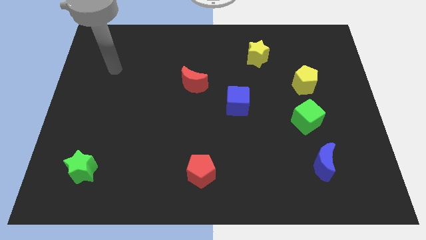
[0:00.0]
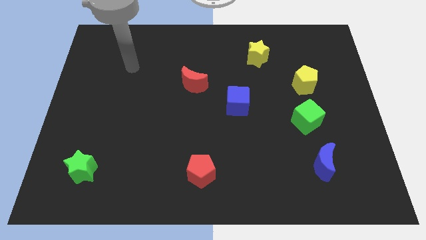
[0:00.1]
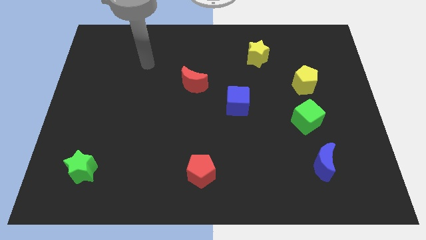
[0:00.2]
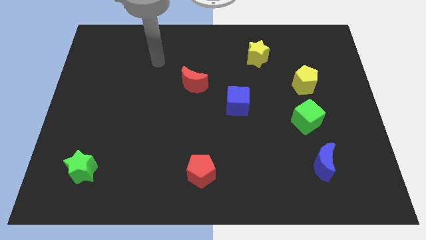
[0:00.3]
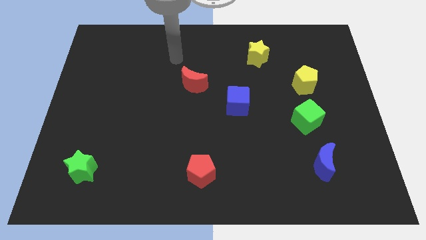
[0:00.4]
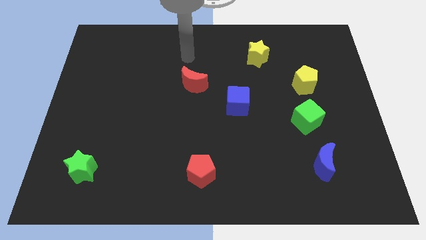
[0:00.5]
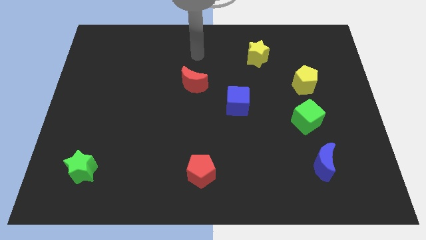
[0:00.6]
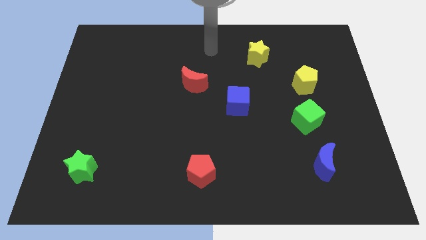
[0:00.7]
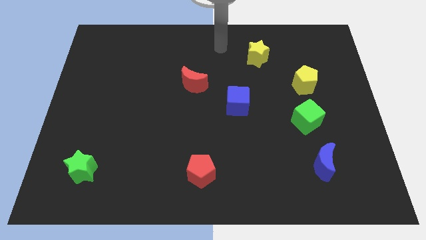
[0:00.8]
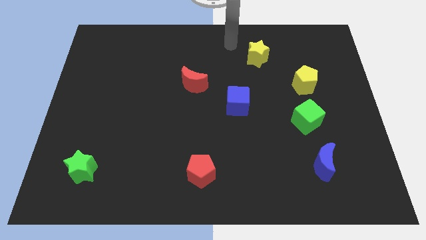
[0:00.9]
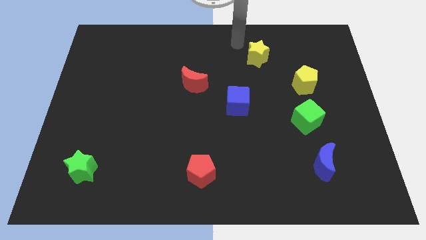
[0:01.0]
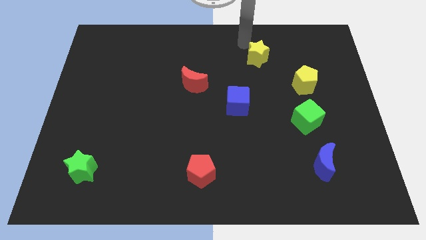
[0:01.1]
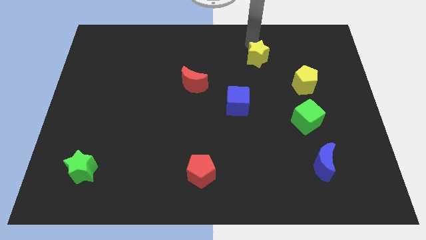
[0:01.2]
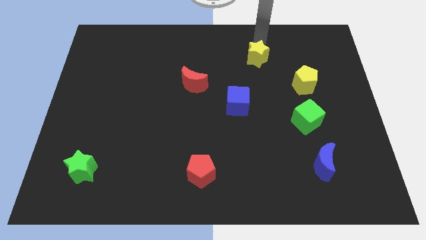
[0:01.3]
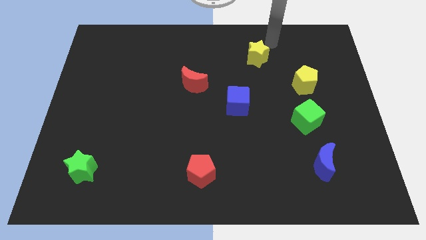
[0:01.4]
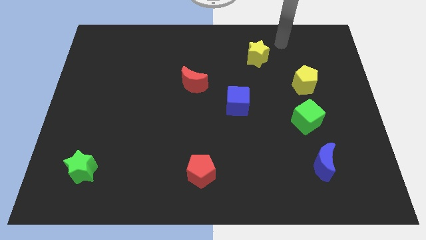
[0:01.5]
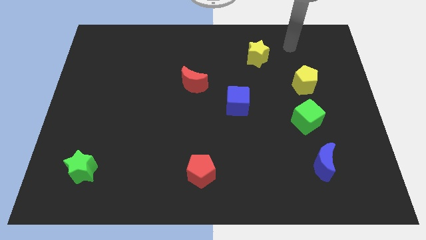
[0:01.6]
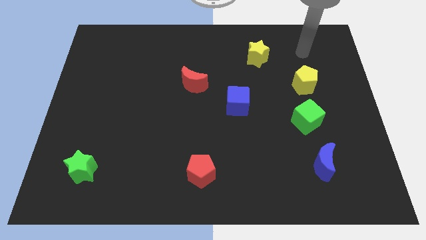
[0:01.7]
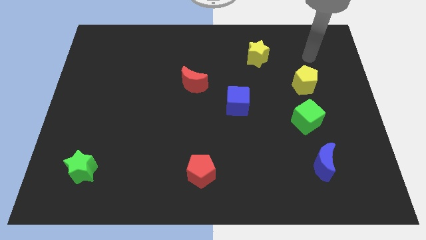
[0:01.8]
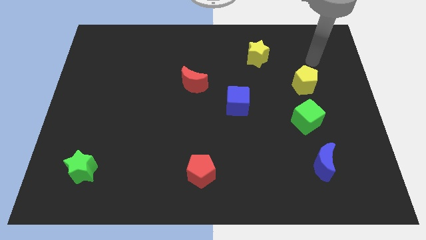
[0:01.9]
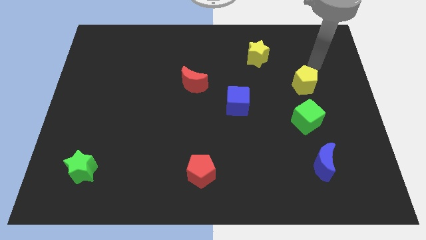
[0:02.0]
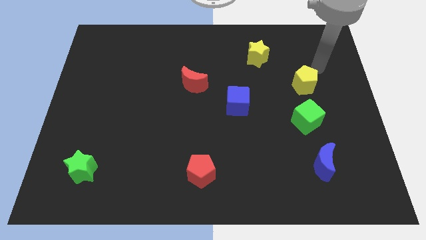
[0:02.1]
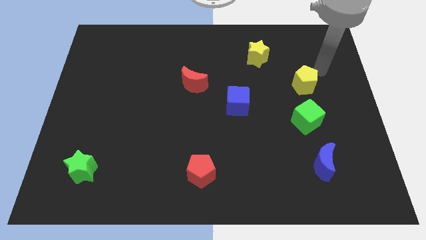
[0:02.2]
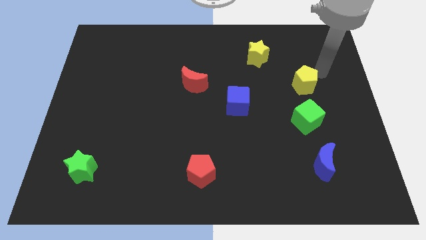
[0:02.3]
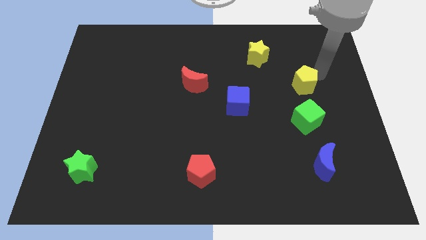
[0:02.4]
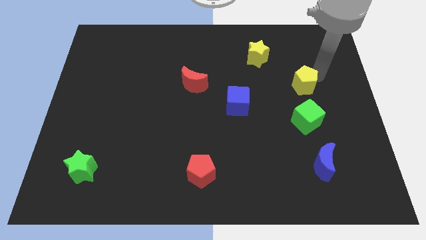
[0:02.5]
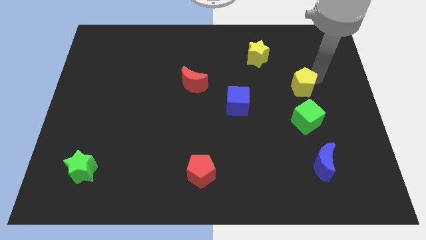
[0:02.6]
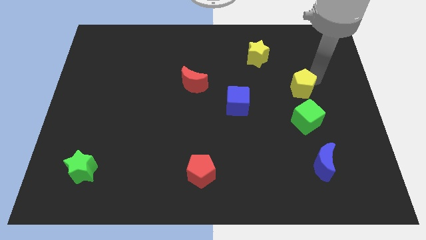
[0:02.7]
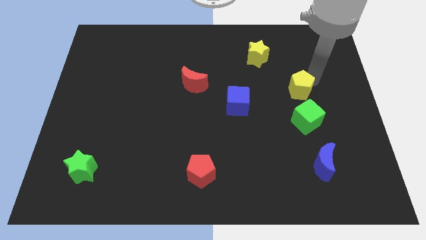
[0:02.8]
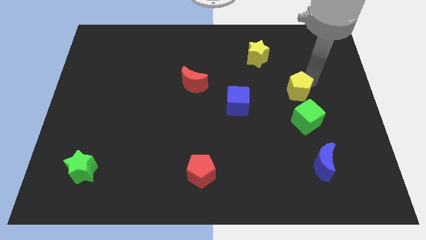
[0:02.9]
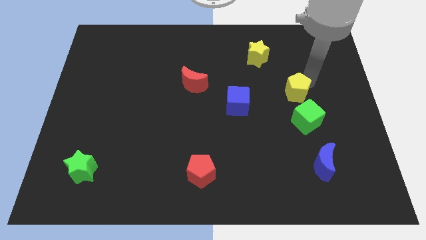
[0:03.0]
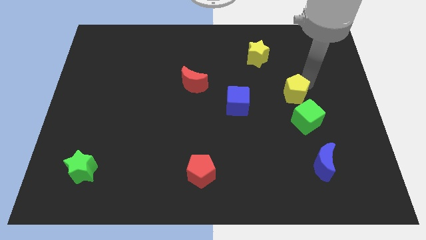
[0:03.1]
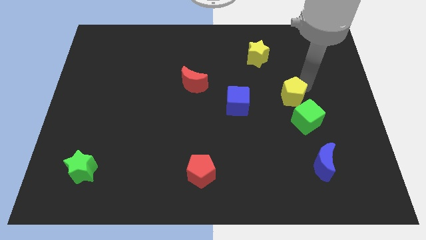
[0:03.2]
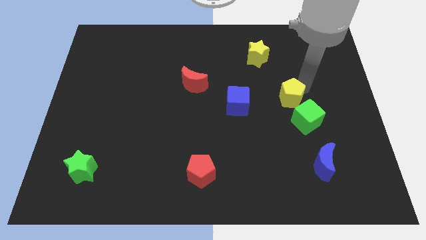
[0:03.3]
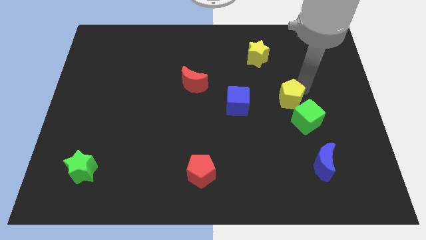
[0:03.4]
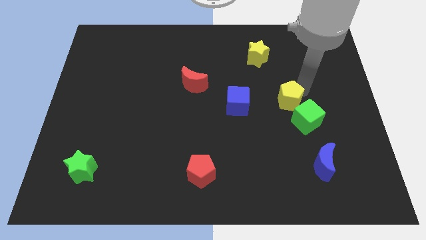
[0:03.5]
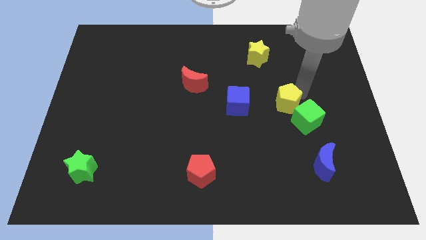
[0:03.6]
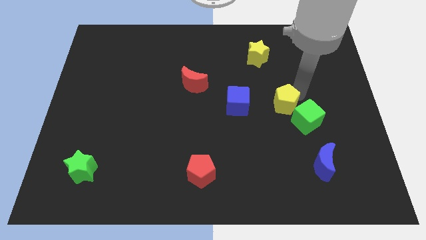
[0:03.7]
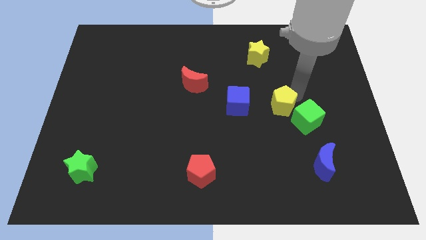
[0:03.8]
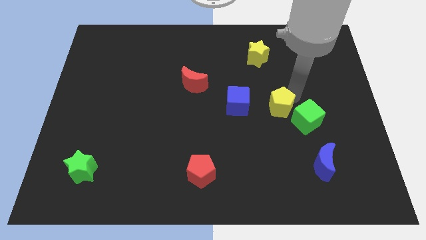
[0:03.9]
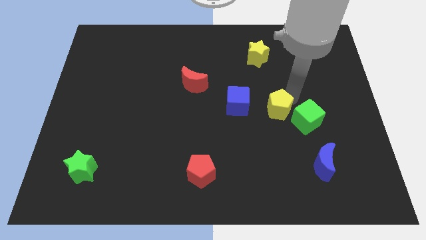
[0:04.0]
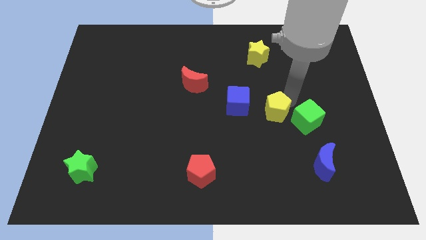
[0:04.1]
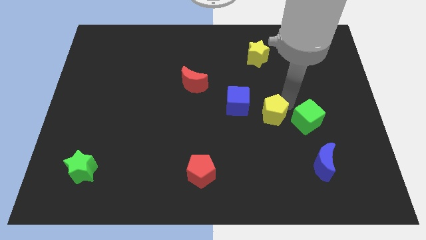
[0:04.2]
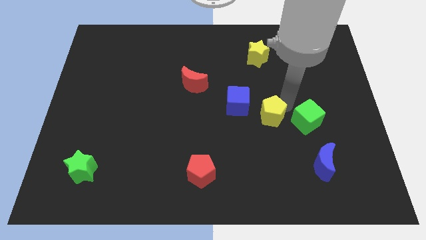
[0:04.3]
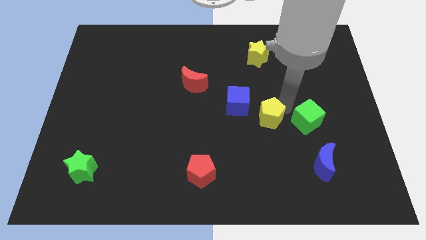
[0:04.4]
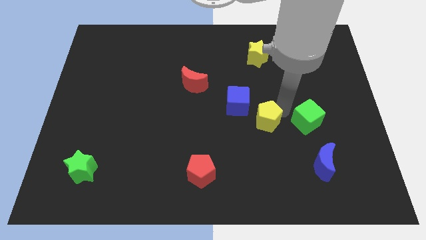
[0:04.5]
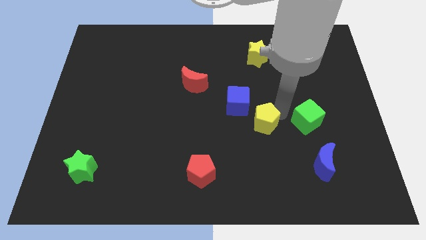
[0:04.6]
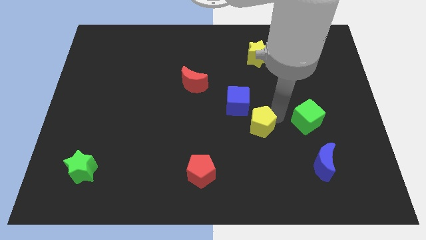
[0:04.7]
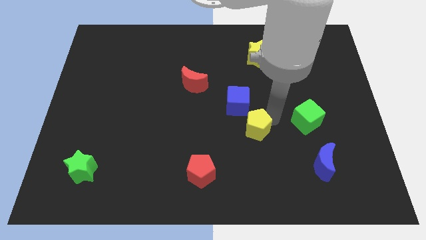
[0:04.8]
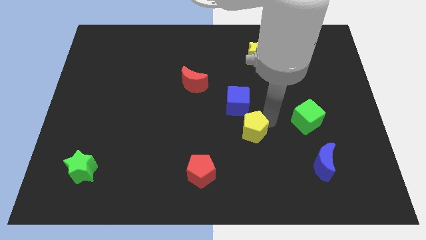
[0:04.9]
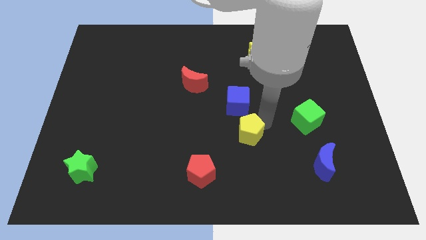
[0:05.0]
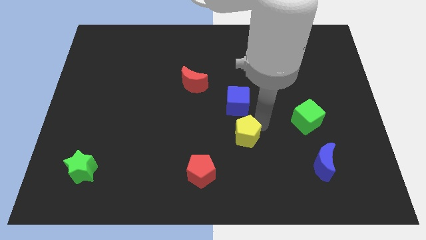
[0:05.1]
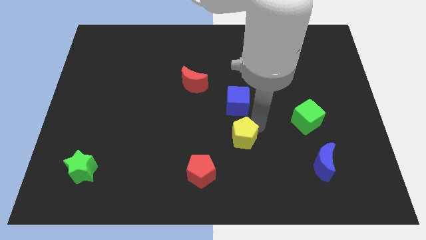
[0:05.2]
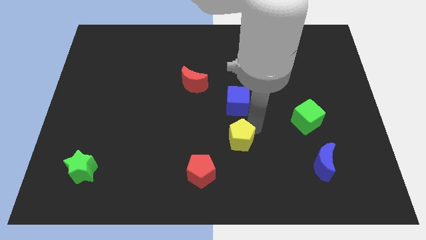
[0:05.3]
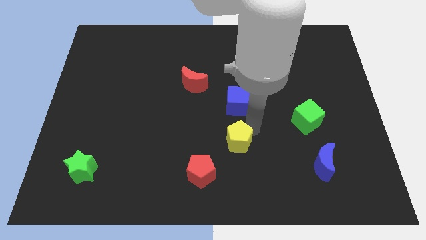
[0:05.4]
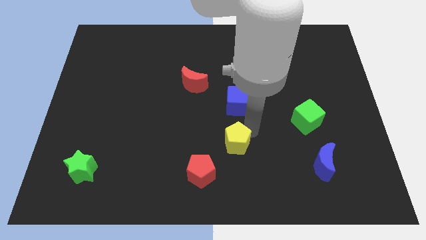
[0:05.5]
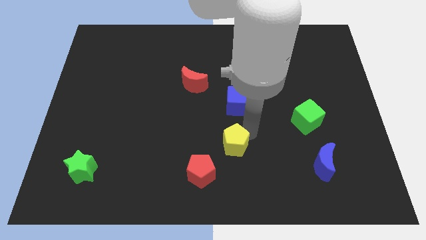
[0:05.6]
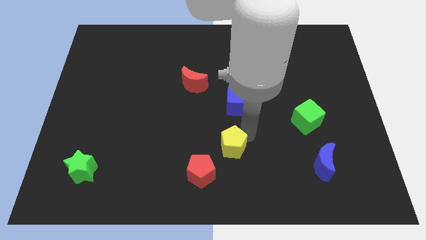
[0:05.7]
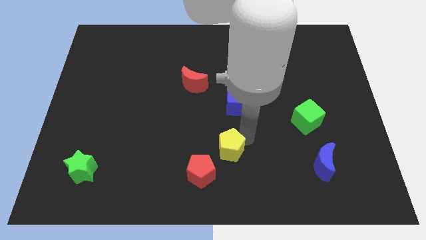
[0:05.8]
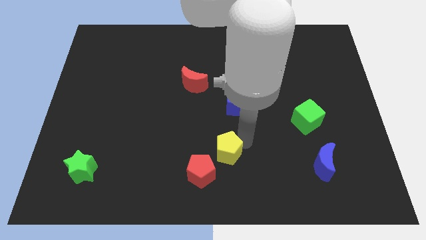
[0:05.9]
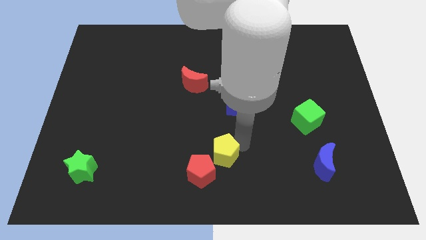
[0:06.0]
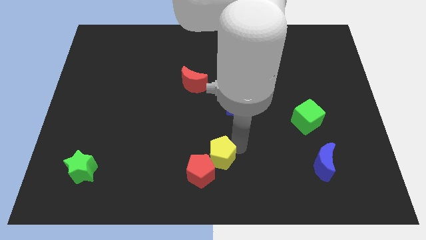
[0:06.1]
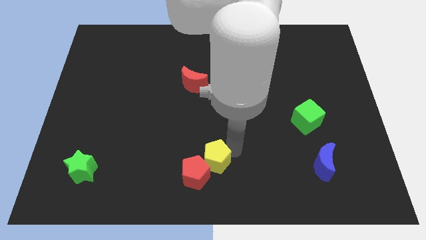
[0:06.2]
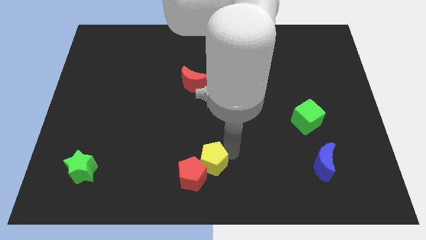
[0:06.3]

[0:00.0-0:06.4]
move the yellow pentagon close to the red pentagon
